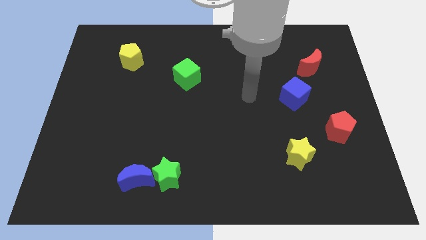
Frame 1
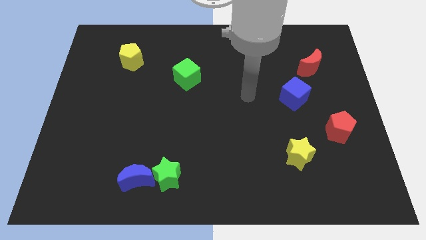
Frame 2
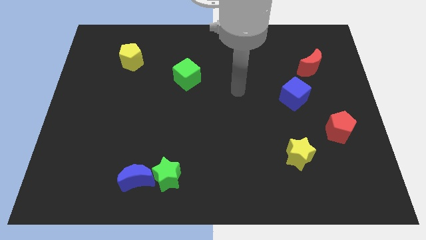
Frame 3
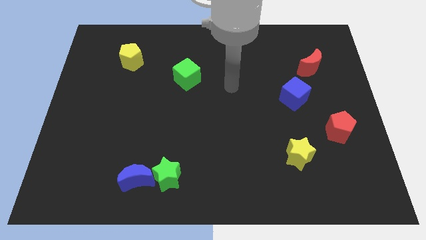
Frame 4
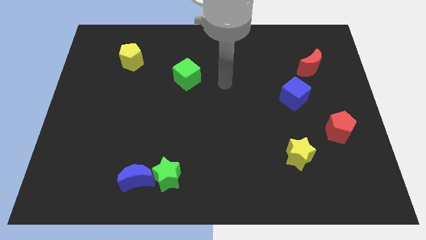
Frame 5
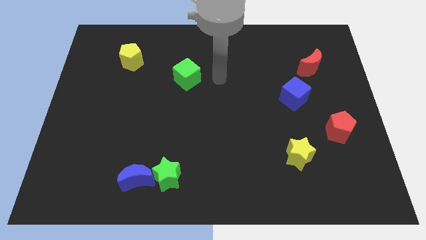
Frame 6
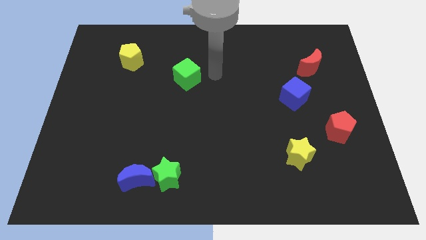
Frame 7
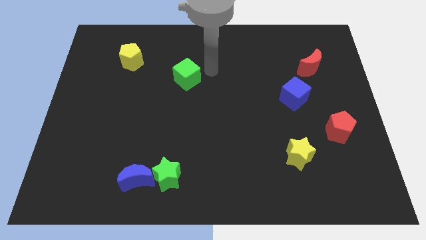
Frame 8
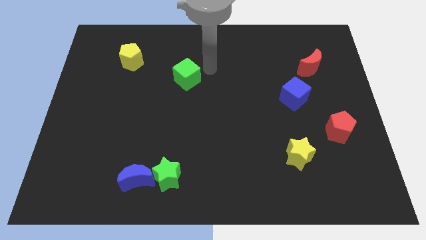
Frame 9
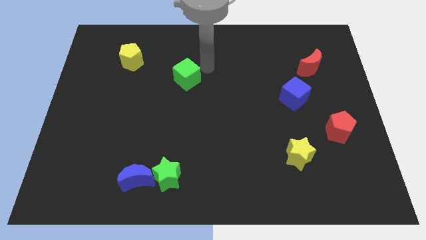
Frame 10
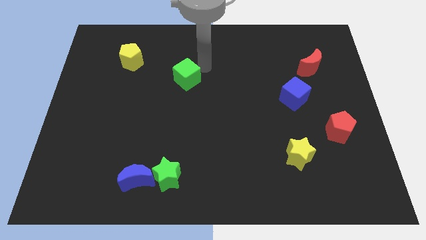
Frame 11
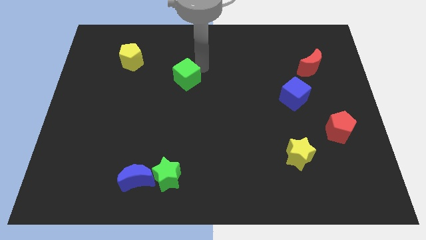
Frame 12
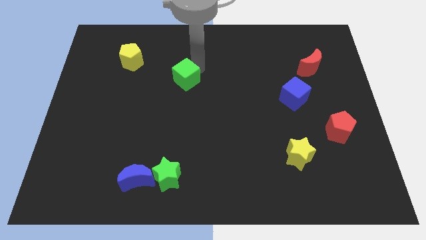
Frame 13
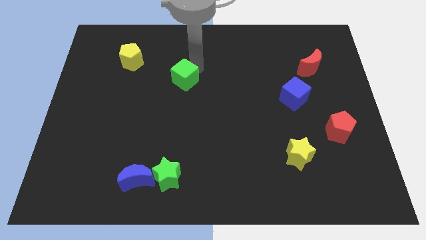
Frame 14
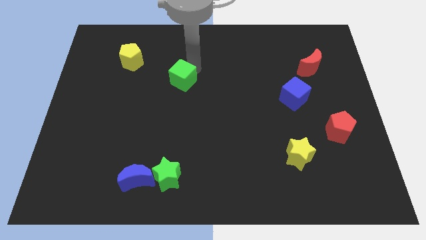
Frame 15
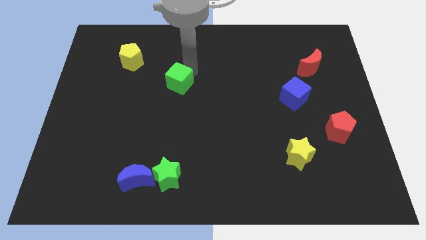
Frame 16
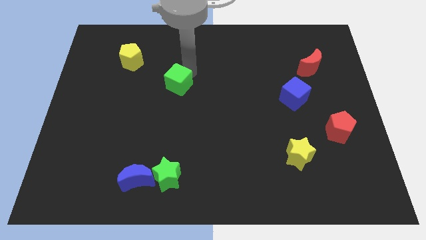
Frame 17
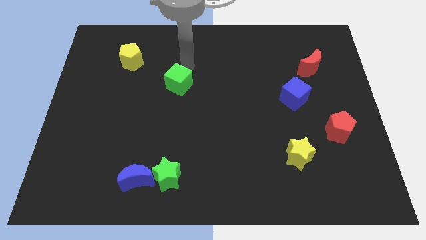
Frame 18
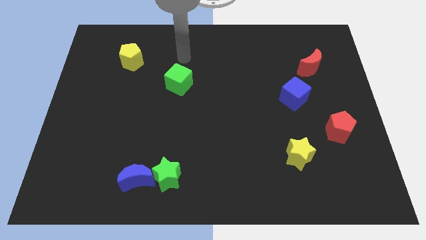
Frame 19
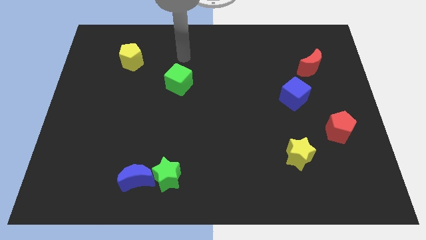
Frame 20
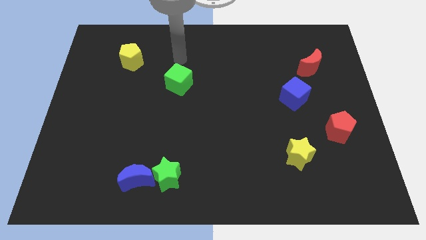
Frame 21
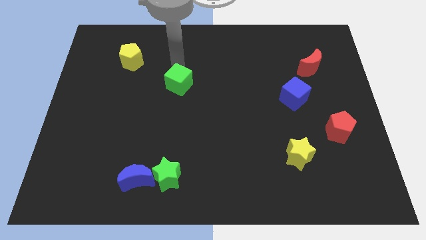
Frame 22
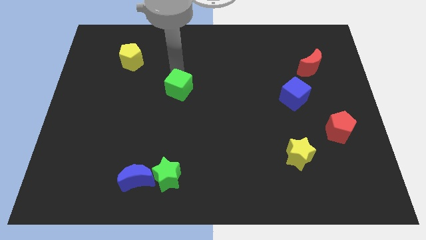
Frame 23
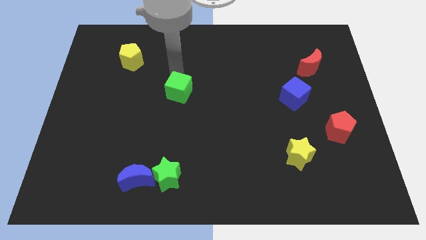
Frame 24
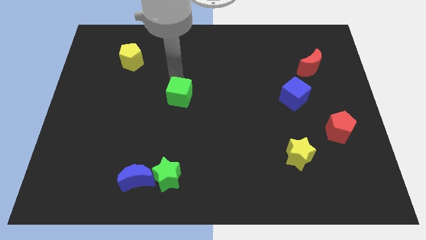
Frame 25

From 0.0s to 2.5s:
place the arm above the green cube

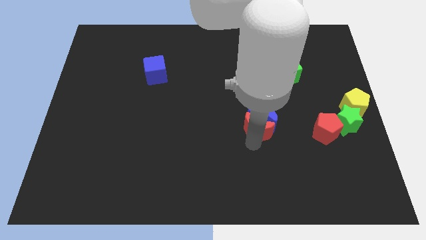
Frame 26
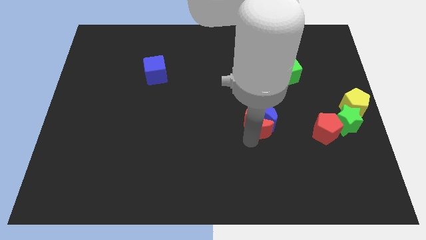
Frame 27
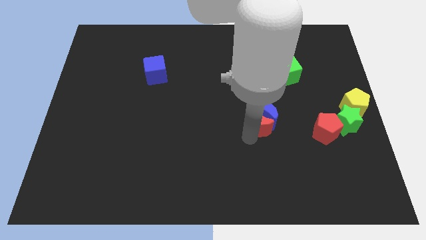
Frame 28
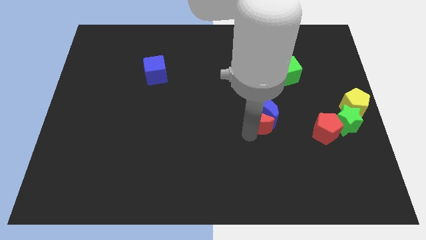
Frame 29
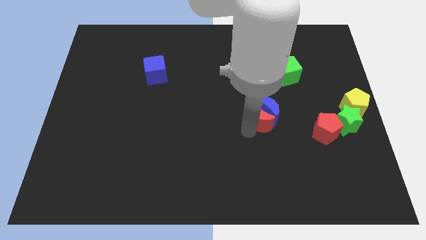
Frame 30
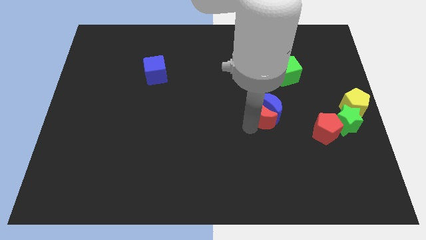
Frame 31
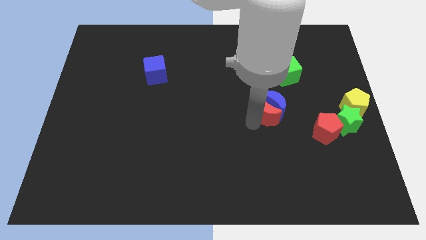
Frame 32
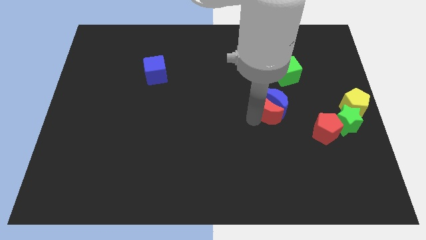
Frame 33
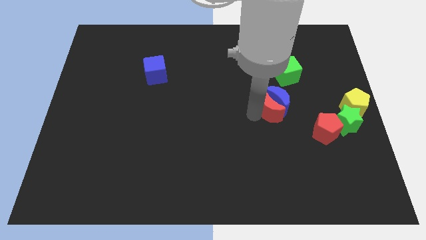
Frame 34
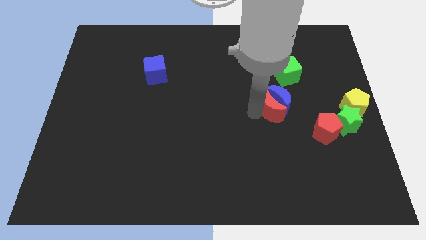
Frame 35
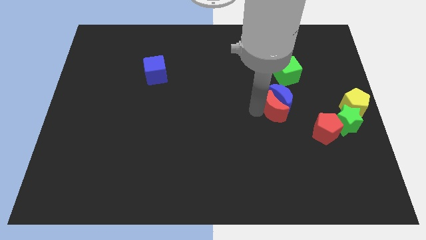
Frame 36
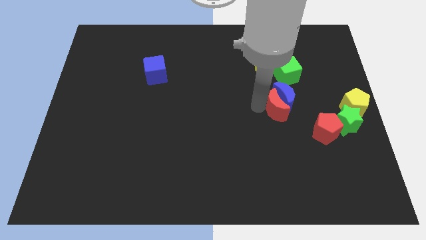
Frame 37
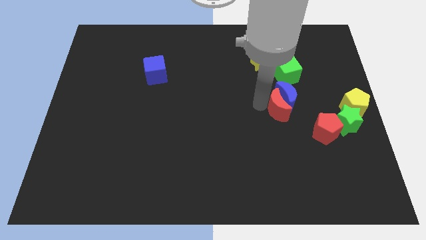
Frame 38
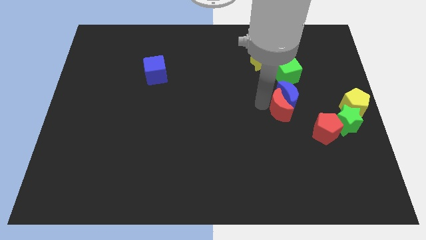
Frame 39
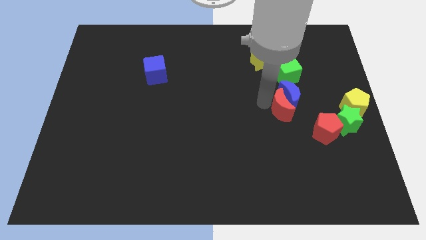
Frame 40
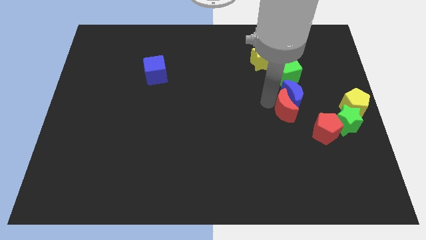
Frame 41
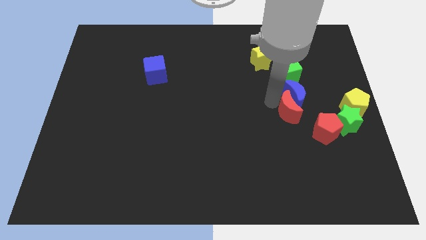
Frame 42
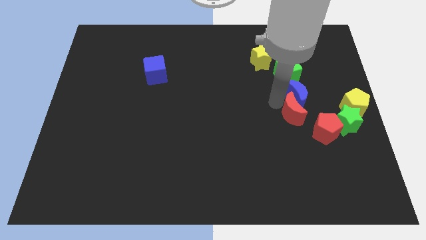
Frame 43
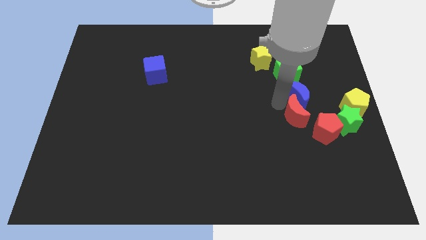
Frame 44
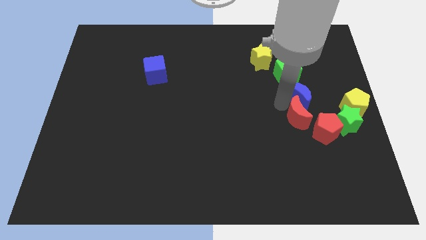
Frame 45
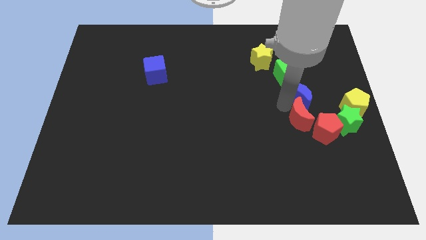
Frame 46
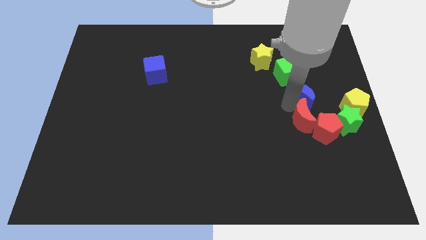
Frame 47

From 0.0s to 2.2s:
move the red crescent and blue crescent towards the right center of the board

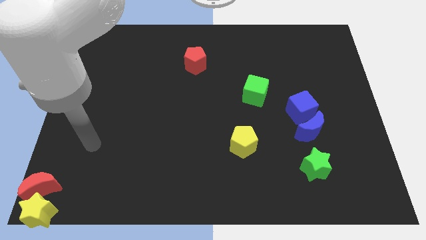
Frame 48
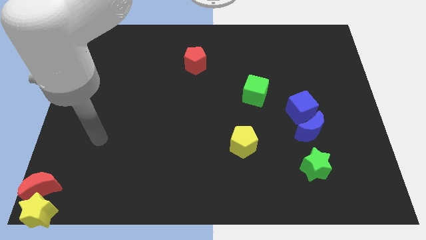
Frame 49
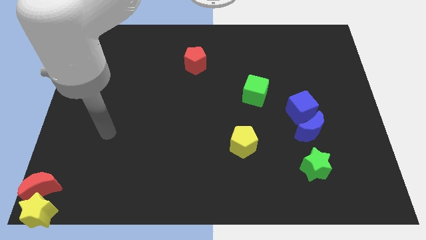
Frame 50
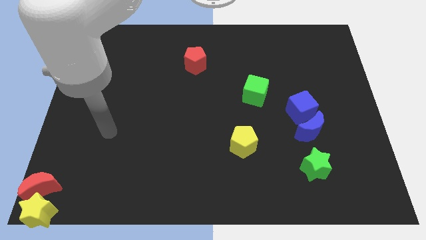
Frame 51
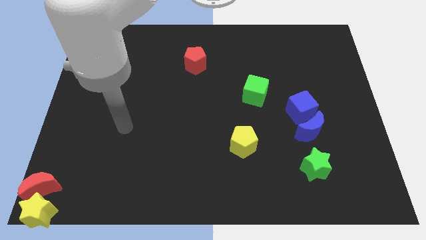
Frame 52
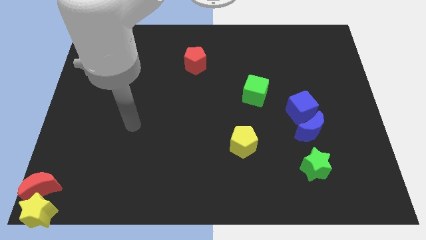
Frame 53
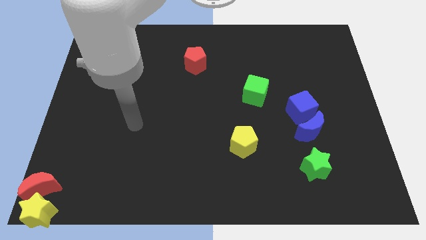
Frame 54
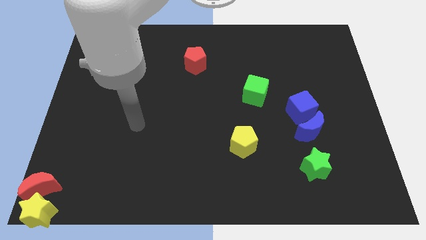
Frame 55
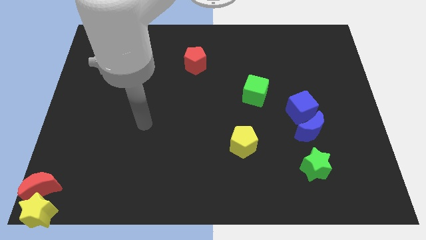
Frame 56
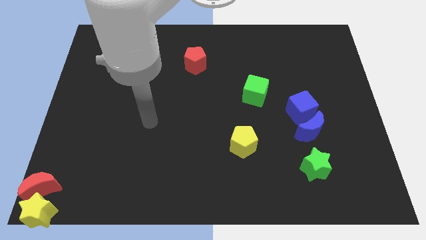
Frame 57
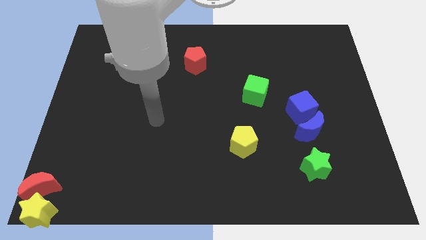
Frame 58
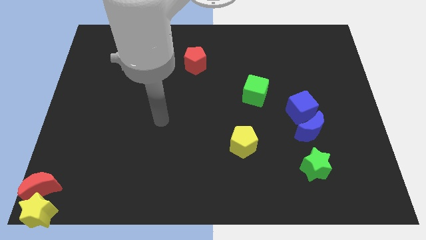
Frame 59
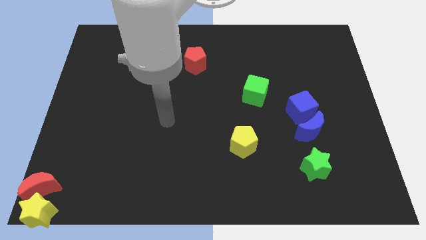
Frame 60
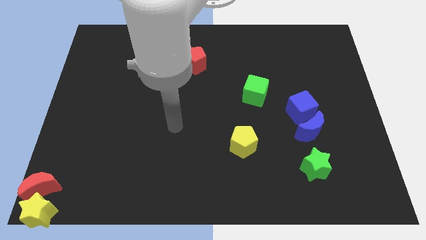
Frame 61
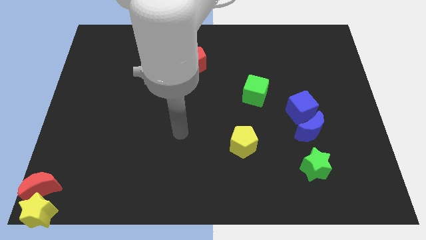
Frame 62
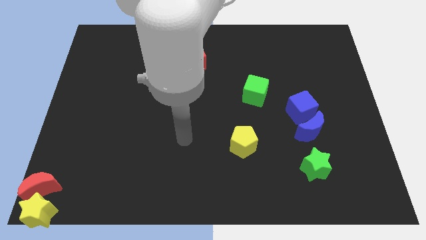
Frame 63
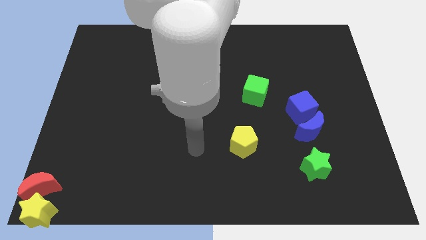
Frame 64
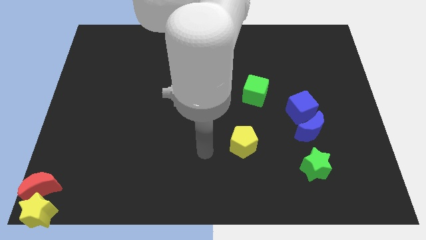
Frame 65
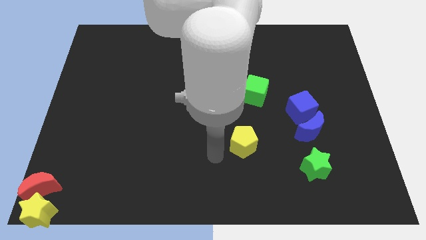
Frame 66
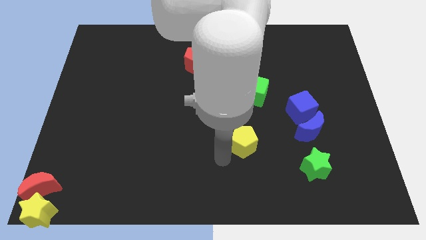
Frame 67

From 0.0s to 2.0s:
move your arm towards the yellow pentagon

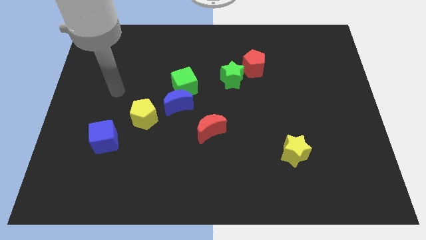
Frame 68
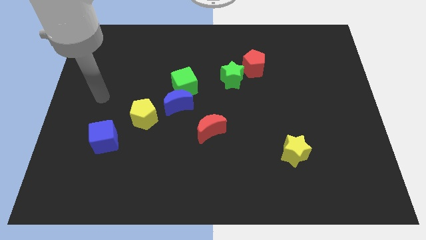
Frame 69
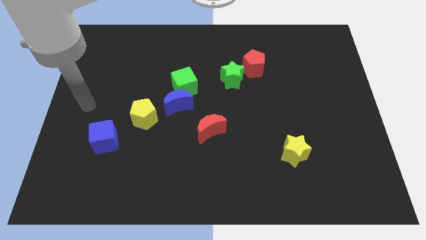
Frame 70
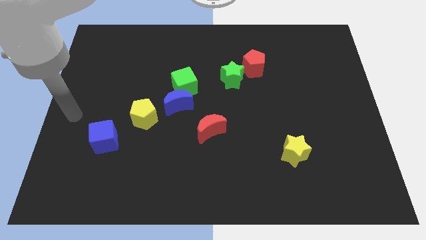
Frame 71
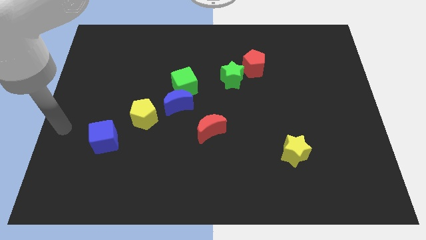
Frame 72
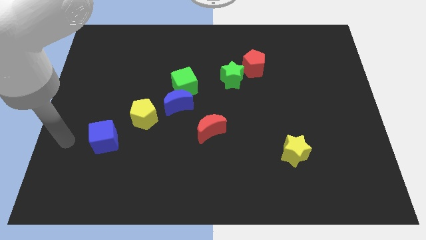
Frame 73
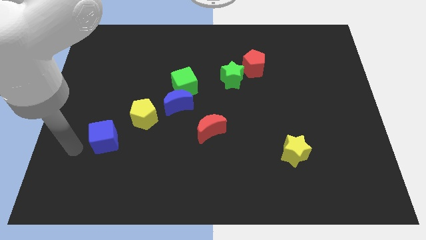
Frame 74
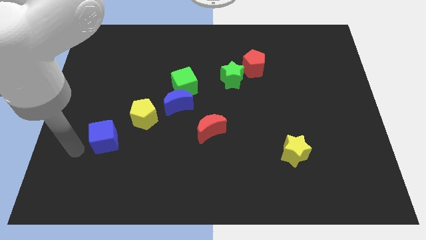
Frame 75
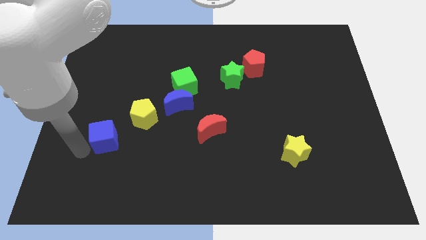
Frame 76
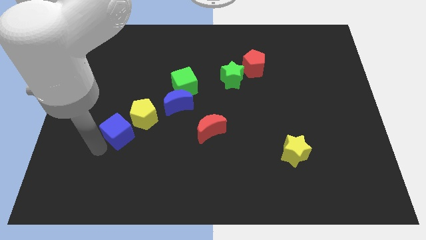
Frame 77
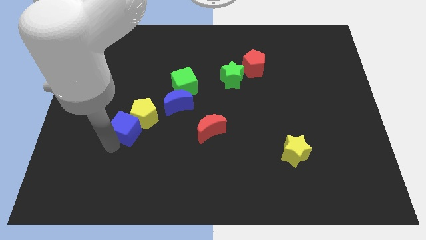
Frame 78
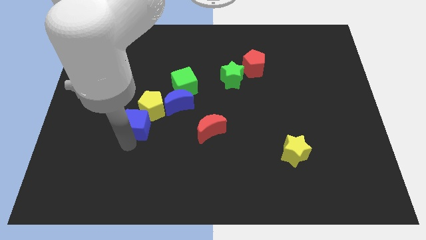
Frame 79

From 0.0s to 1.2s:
push the blue cube into the yellow pentagon

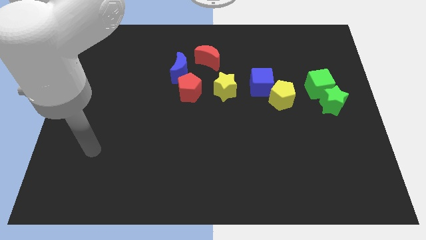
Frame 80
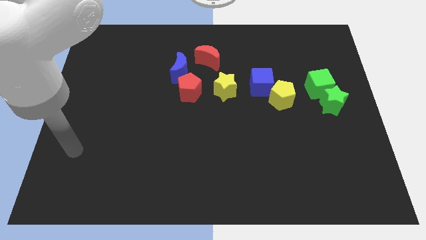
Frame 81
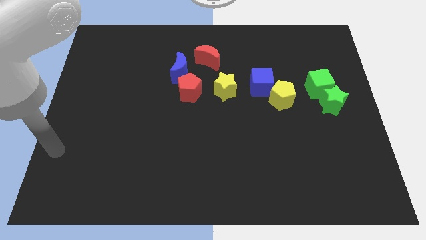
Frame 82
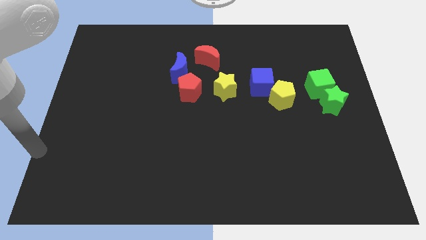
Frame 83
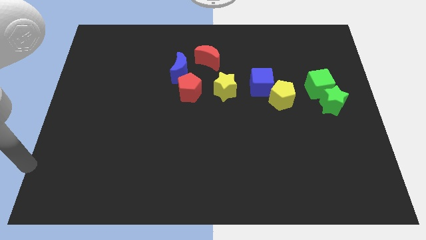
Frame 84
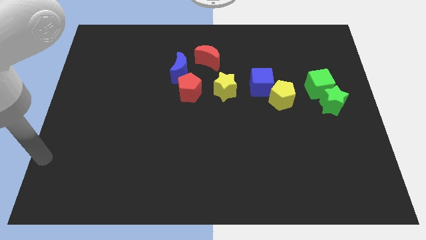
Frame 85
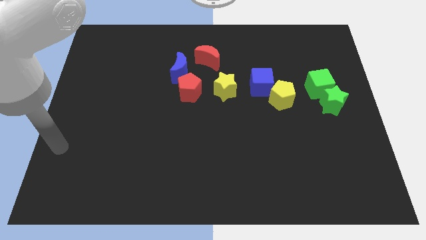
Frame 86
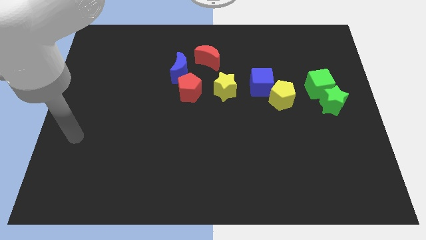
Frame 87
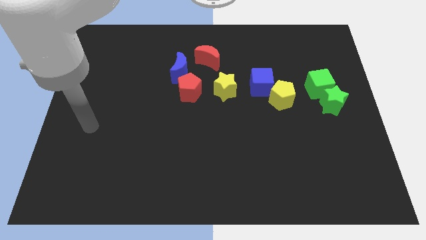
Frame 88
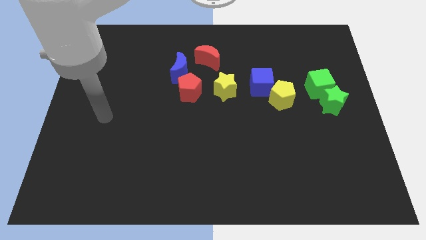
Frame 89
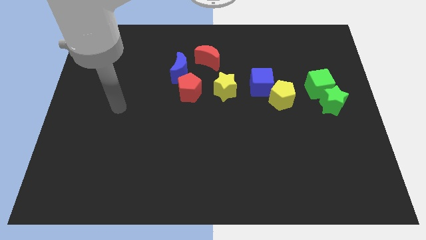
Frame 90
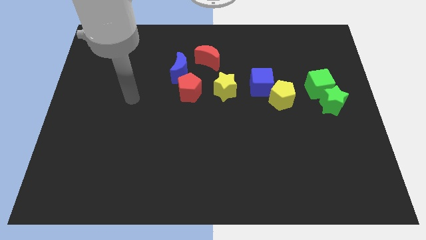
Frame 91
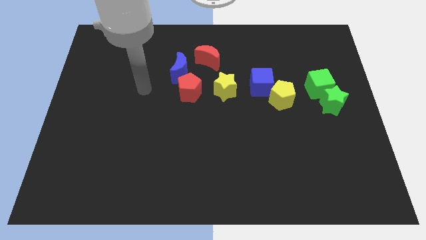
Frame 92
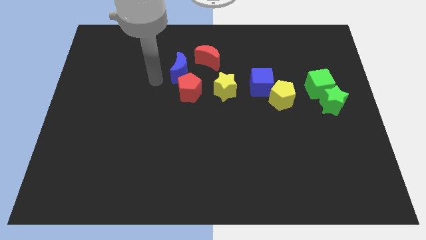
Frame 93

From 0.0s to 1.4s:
move the arm to the top
